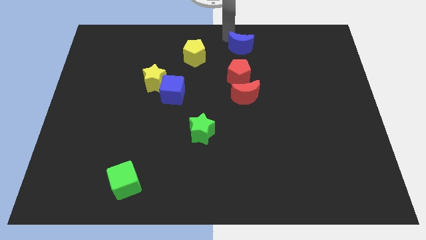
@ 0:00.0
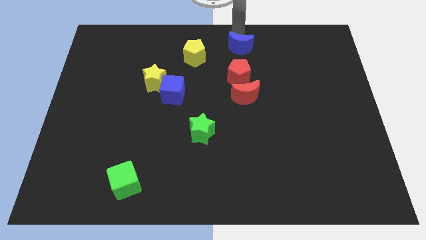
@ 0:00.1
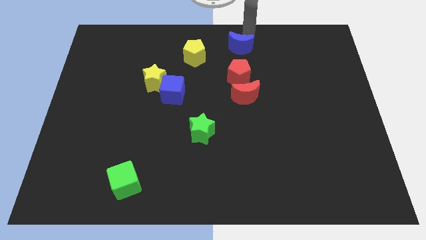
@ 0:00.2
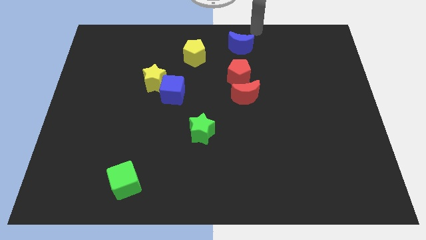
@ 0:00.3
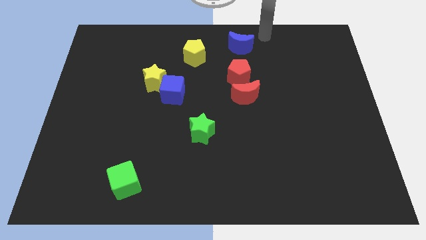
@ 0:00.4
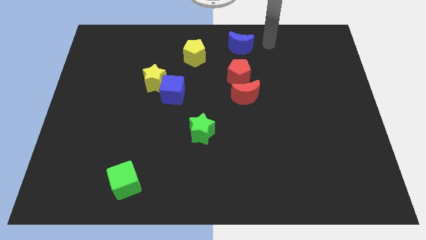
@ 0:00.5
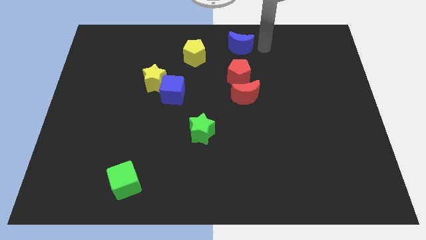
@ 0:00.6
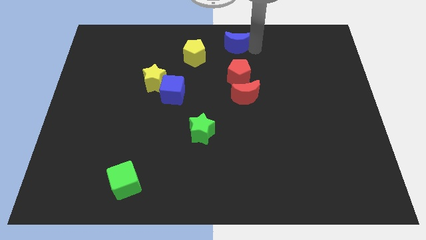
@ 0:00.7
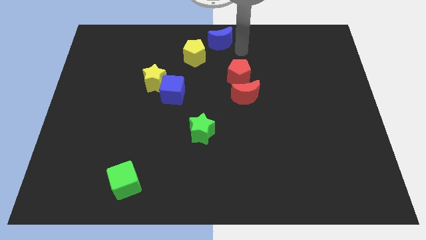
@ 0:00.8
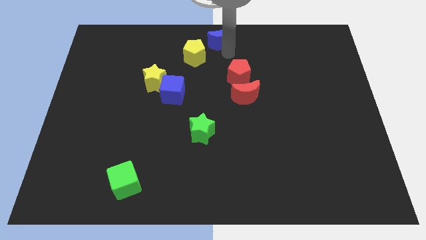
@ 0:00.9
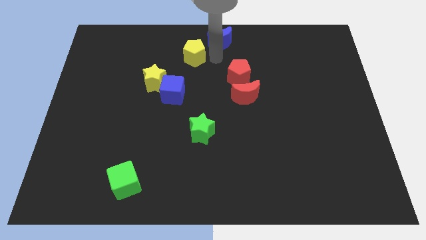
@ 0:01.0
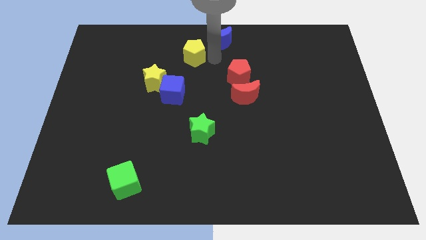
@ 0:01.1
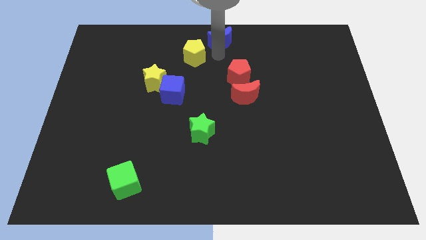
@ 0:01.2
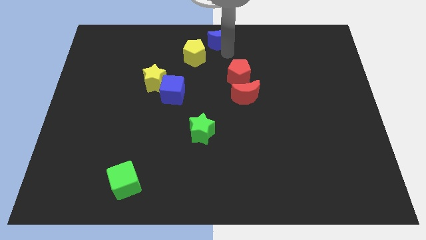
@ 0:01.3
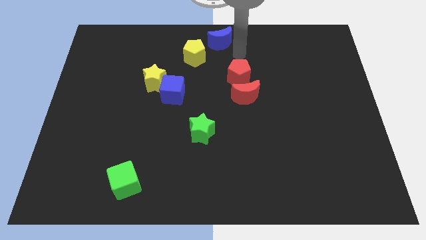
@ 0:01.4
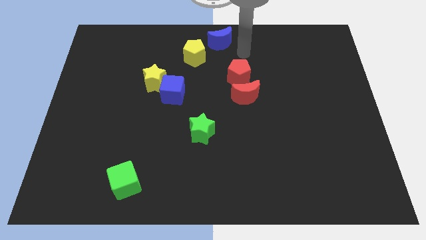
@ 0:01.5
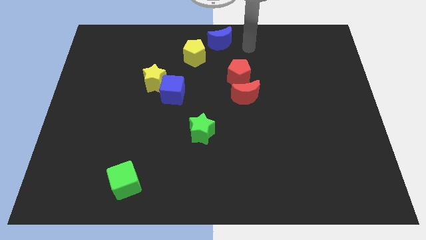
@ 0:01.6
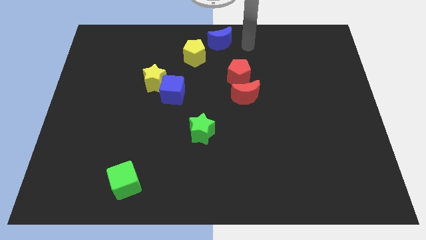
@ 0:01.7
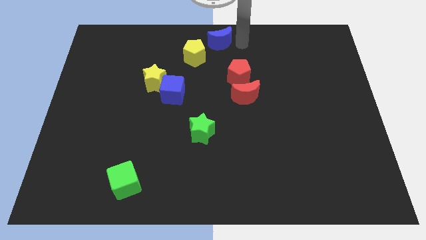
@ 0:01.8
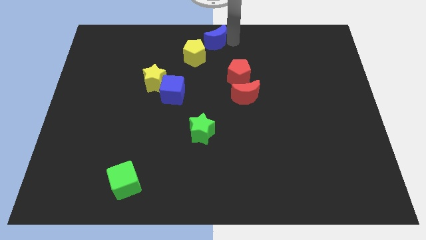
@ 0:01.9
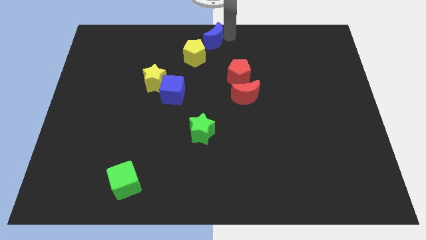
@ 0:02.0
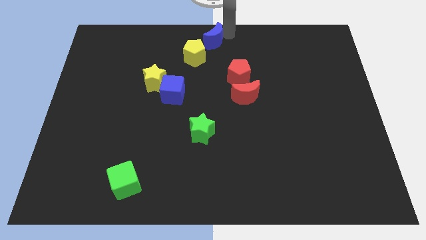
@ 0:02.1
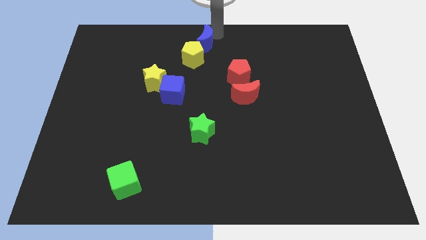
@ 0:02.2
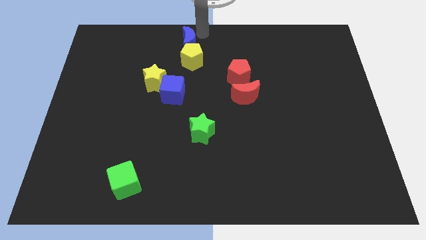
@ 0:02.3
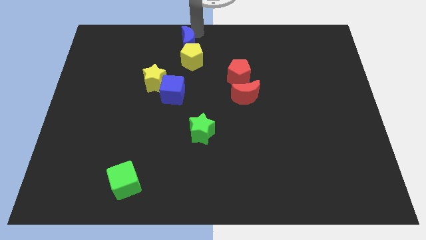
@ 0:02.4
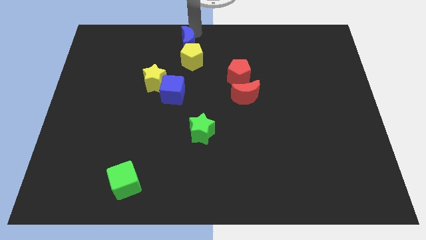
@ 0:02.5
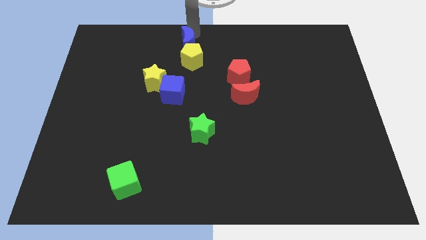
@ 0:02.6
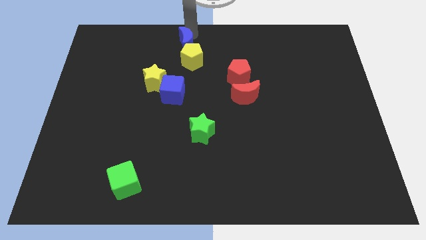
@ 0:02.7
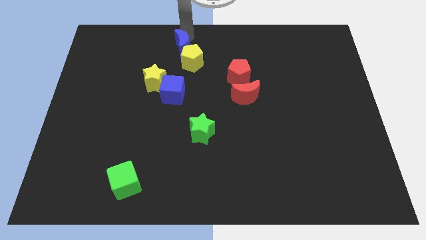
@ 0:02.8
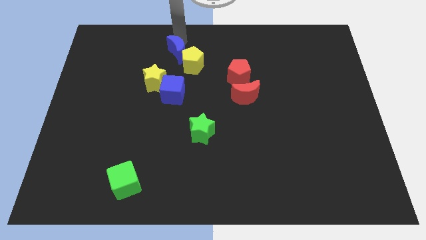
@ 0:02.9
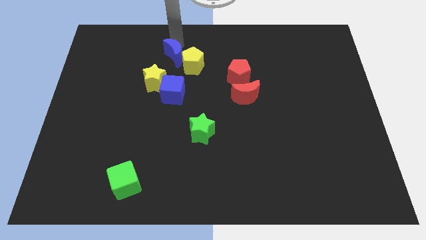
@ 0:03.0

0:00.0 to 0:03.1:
push blue moon towards yellow pentagon

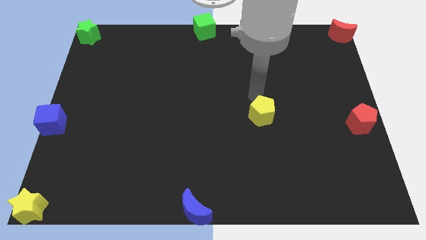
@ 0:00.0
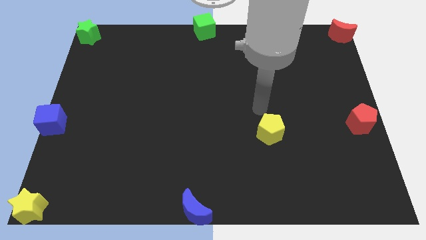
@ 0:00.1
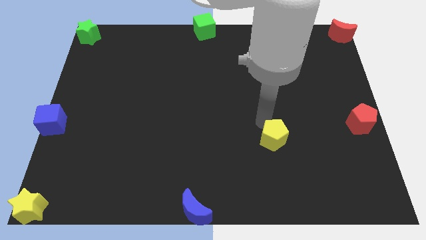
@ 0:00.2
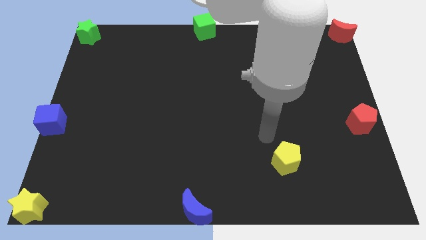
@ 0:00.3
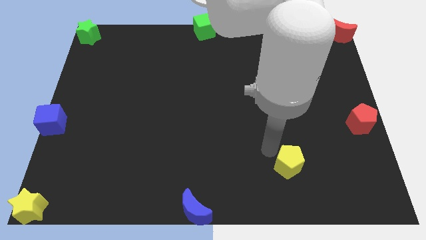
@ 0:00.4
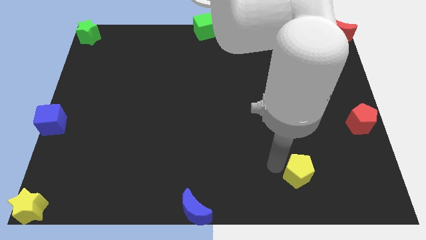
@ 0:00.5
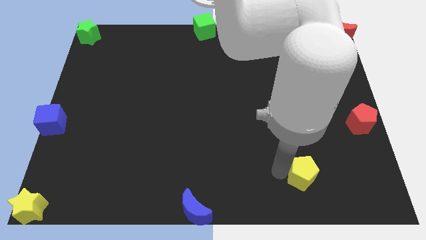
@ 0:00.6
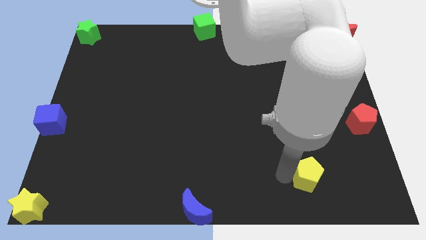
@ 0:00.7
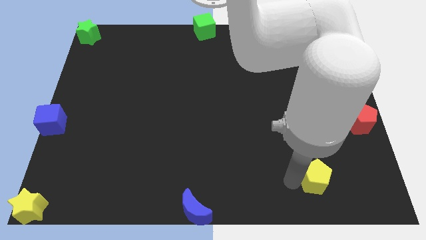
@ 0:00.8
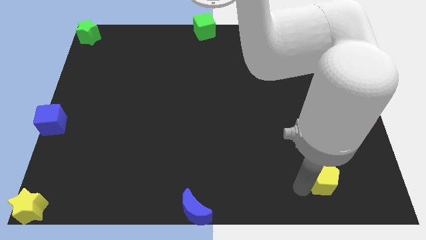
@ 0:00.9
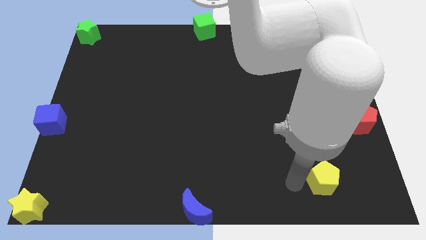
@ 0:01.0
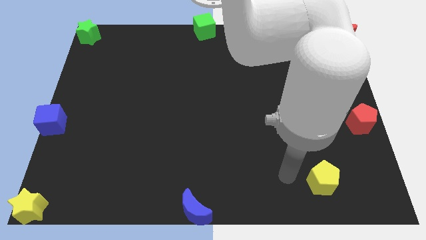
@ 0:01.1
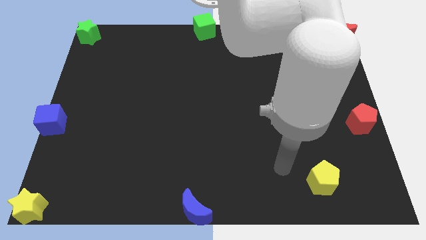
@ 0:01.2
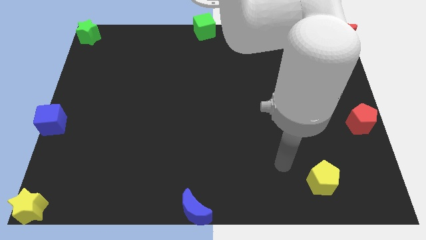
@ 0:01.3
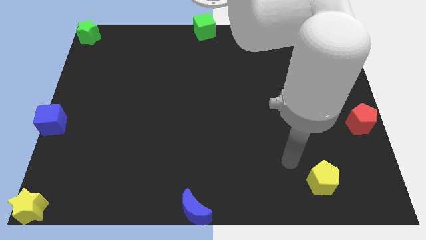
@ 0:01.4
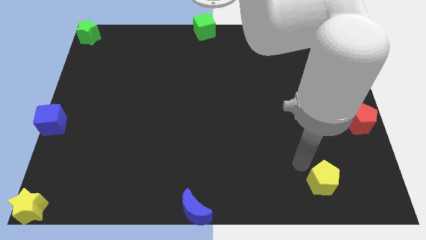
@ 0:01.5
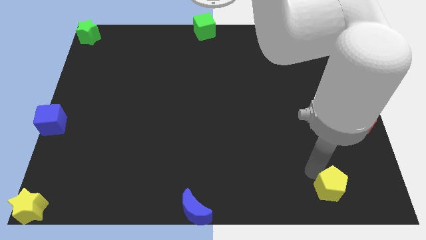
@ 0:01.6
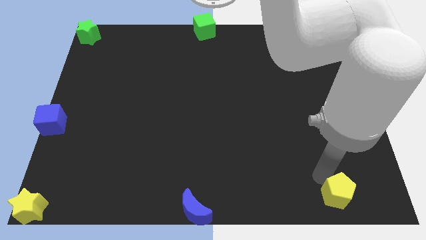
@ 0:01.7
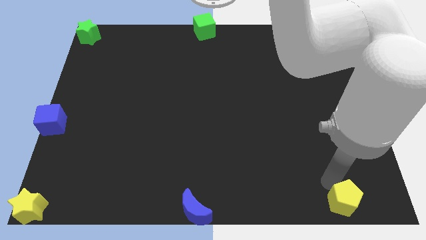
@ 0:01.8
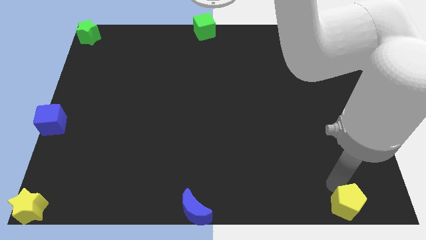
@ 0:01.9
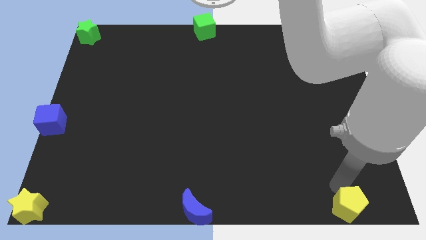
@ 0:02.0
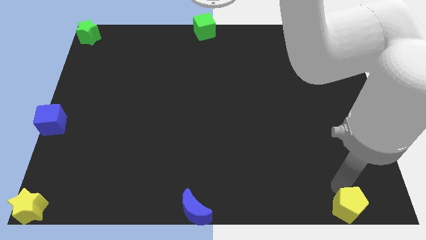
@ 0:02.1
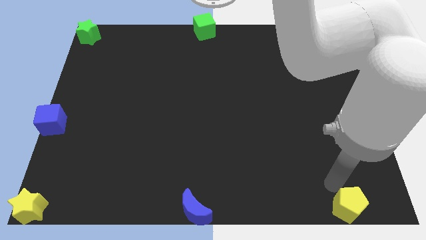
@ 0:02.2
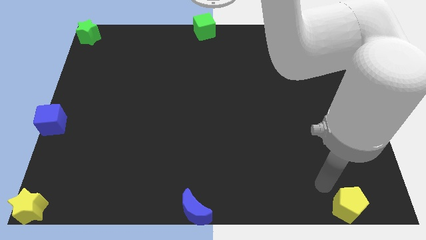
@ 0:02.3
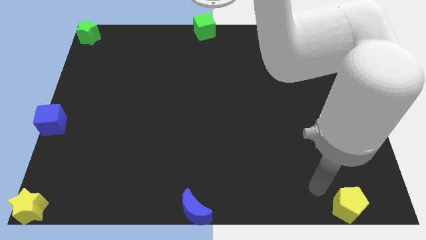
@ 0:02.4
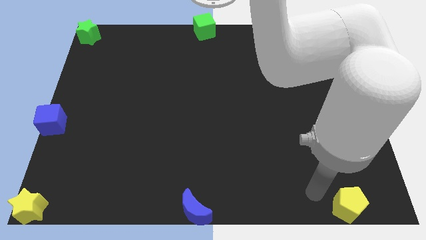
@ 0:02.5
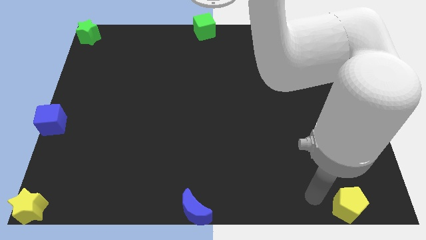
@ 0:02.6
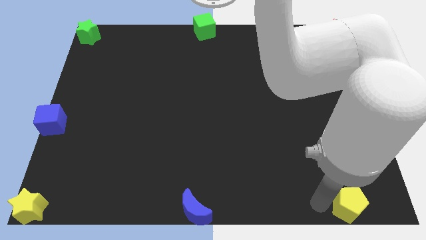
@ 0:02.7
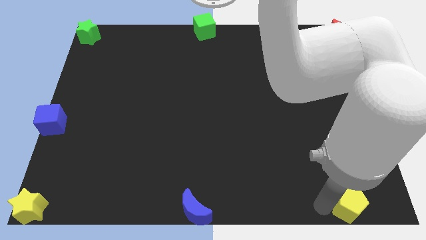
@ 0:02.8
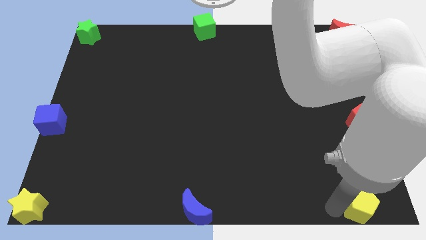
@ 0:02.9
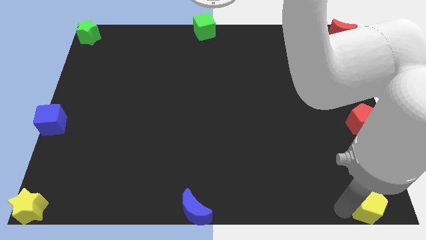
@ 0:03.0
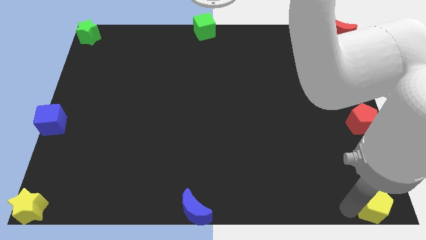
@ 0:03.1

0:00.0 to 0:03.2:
move the yellow pentagon to the bottom right corner of the board

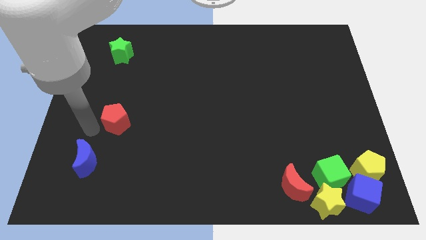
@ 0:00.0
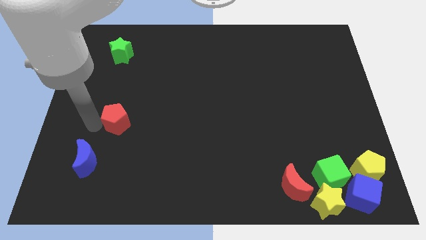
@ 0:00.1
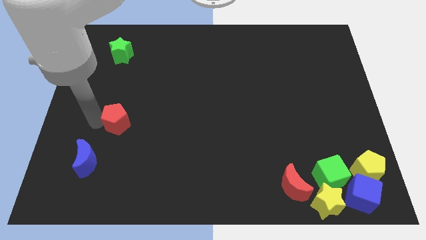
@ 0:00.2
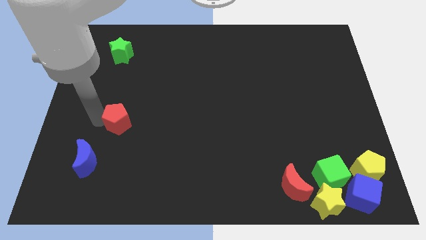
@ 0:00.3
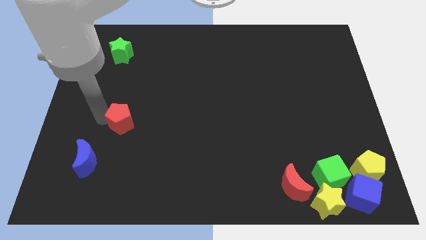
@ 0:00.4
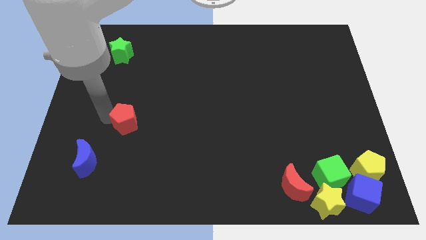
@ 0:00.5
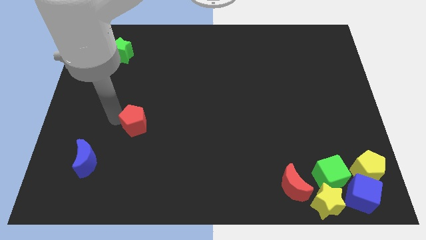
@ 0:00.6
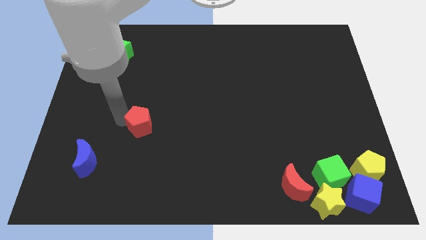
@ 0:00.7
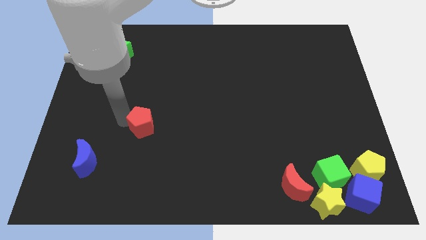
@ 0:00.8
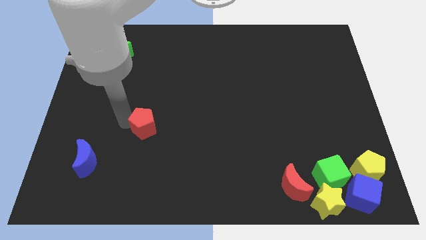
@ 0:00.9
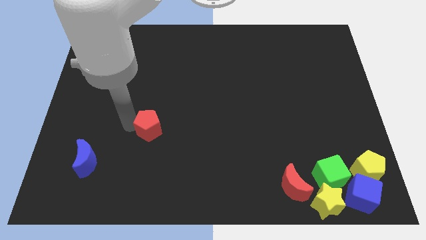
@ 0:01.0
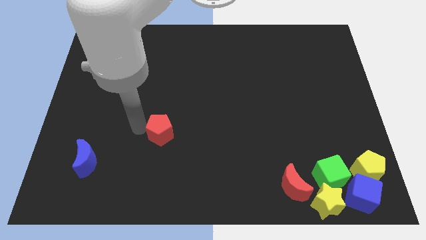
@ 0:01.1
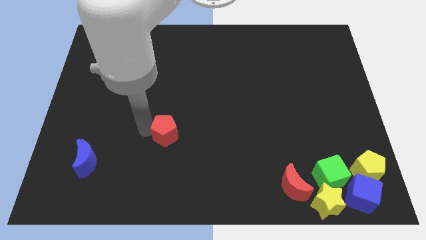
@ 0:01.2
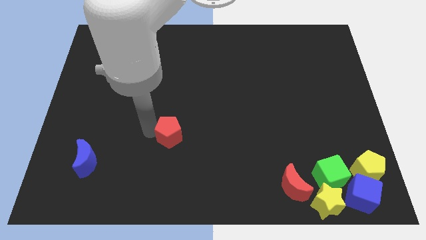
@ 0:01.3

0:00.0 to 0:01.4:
slightly move the red pentagon to right

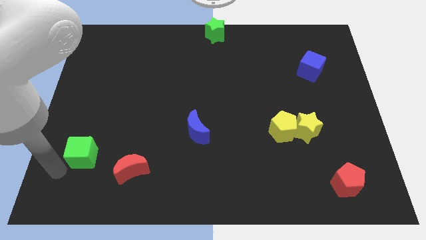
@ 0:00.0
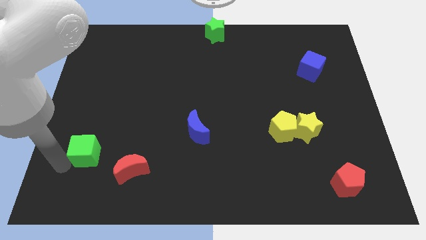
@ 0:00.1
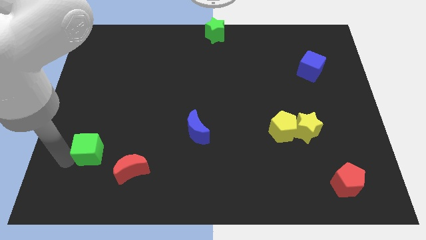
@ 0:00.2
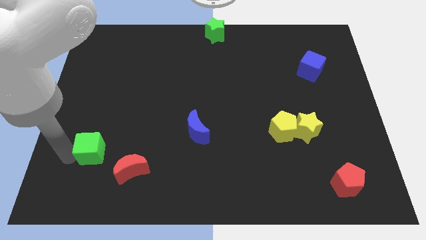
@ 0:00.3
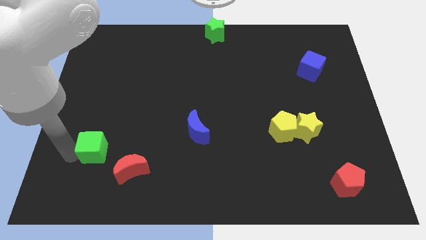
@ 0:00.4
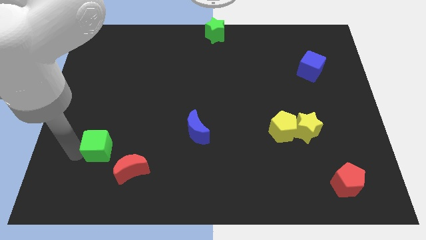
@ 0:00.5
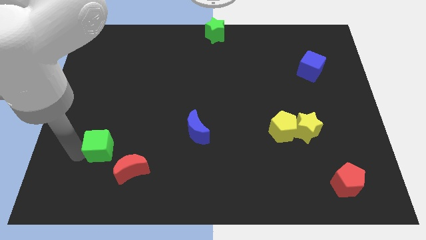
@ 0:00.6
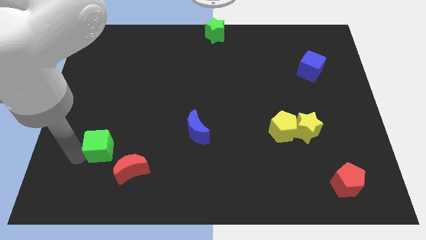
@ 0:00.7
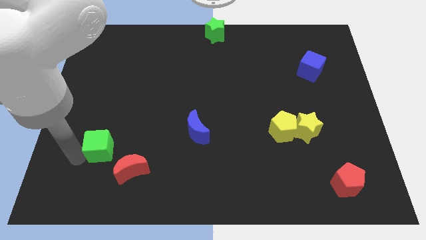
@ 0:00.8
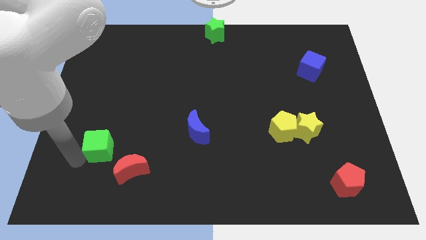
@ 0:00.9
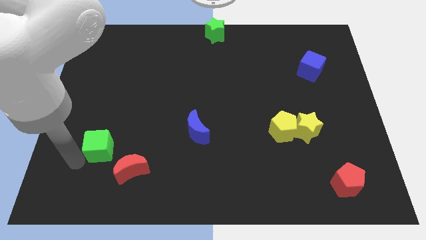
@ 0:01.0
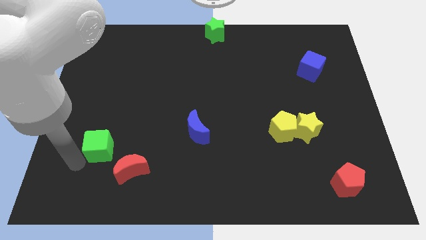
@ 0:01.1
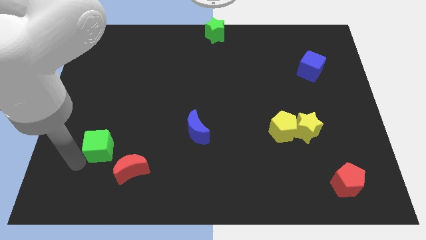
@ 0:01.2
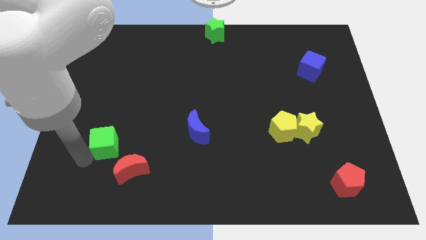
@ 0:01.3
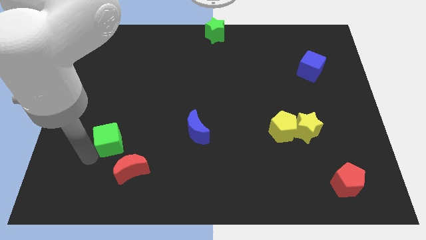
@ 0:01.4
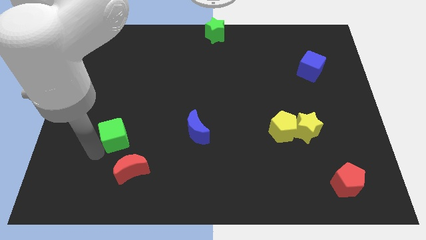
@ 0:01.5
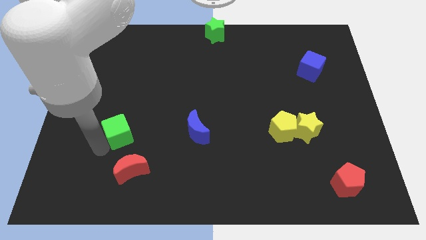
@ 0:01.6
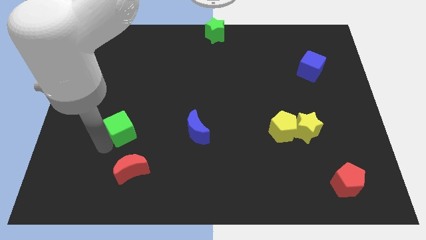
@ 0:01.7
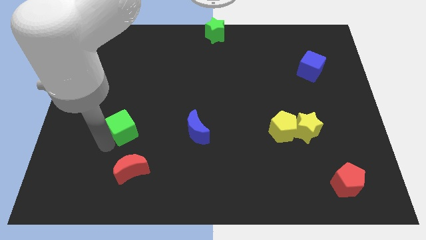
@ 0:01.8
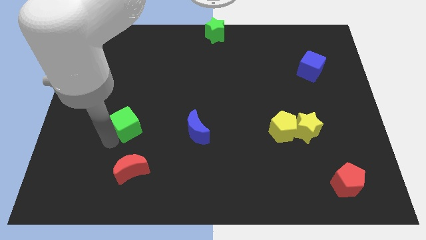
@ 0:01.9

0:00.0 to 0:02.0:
place green cube to the top of red moon
